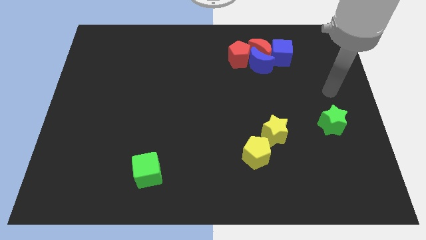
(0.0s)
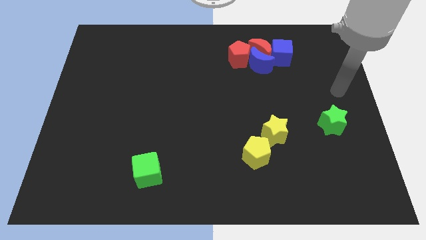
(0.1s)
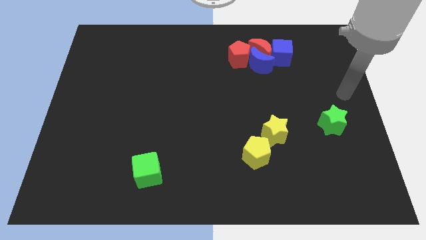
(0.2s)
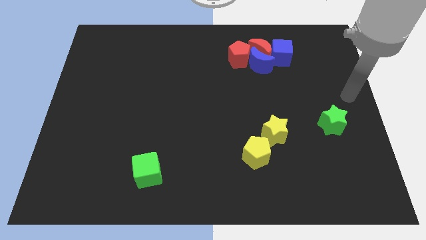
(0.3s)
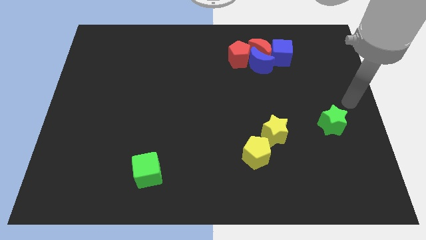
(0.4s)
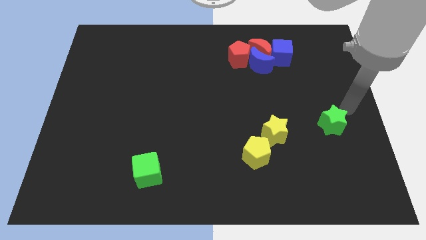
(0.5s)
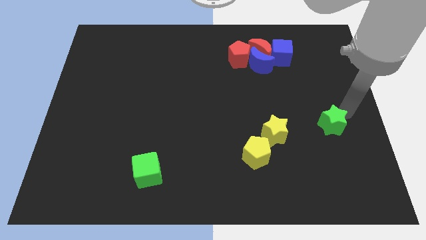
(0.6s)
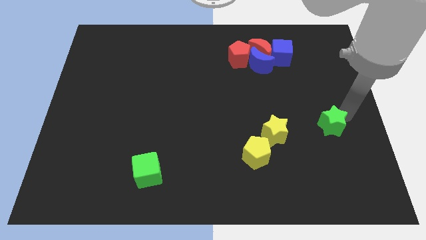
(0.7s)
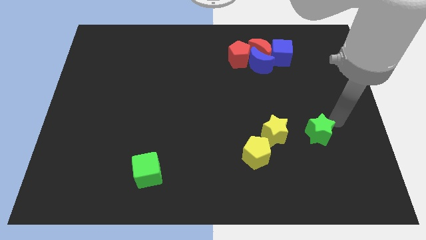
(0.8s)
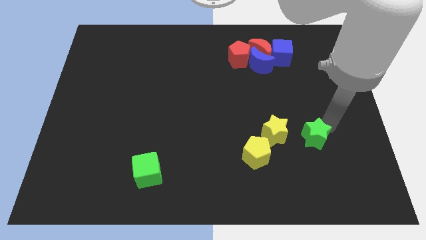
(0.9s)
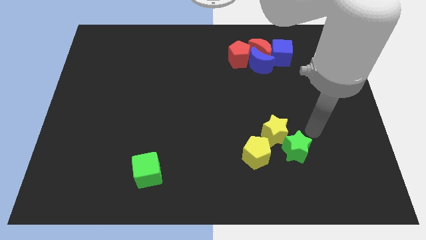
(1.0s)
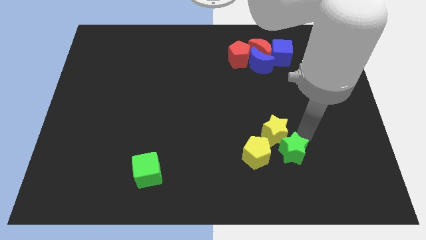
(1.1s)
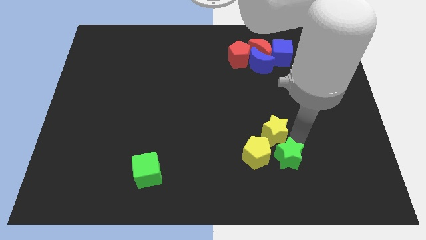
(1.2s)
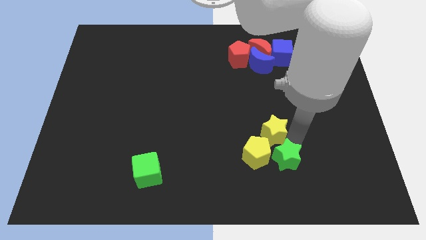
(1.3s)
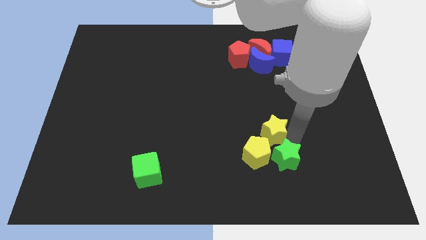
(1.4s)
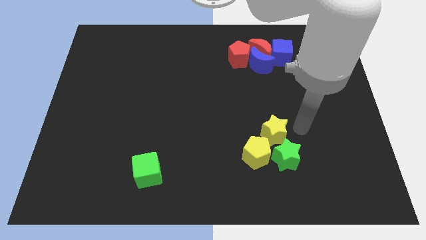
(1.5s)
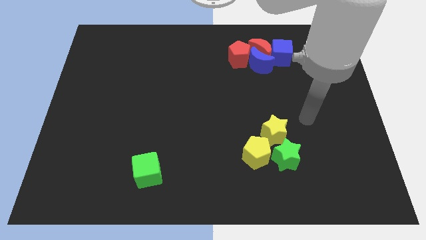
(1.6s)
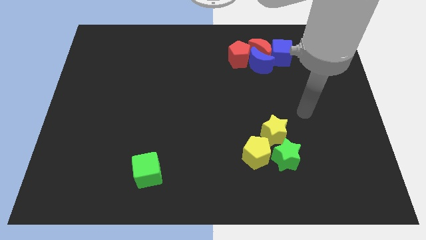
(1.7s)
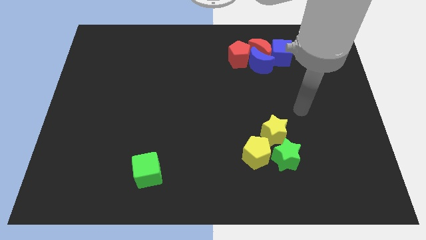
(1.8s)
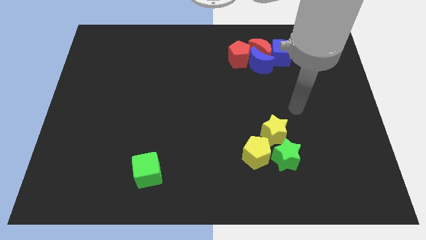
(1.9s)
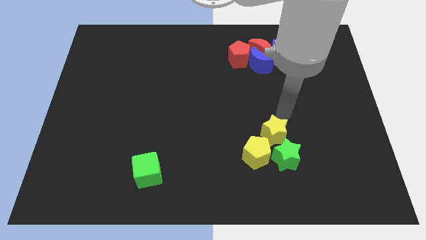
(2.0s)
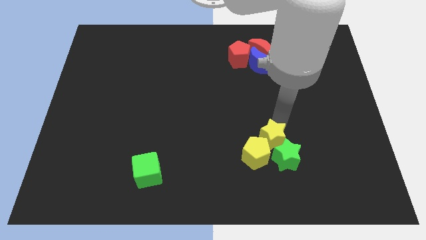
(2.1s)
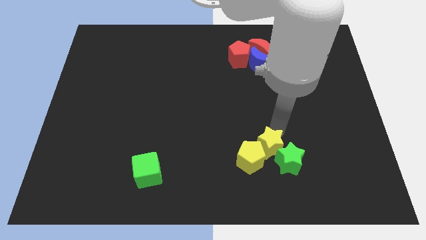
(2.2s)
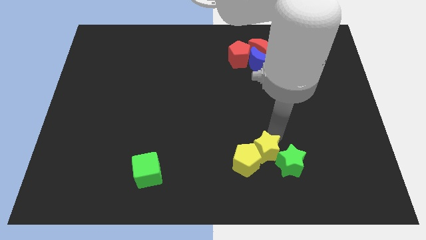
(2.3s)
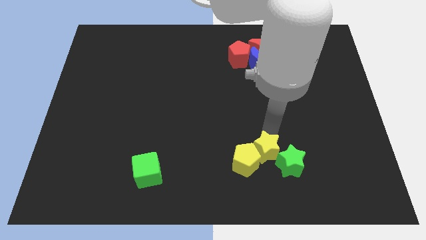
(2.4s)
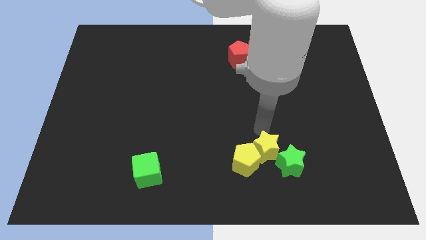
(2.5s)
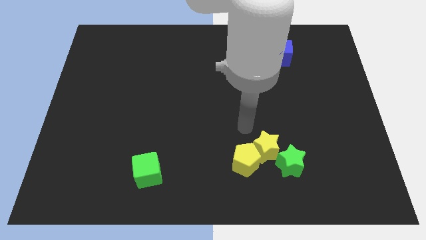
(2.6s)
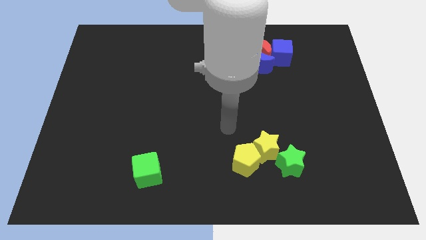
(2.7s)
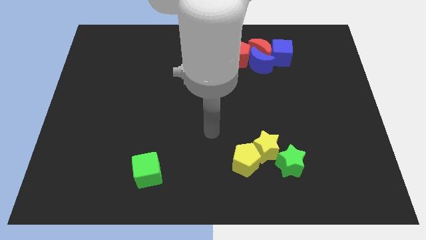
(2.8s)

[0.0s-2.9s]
push the green star to the bottom right of the yellow star

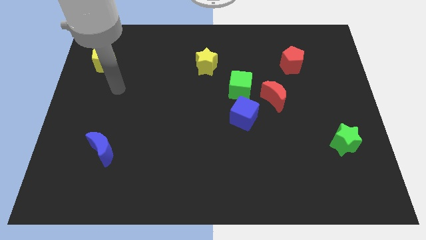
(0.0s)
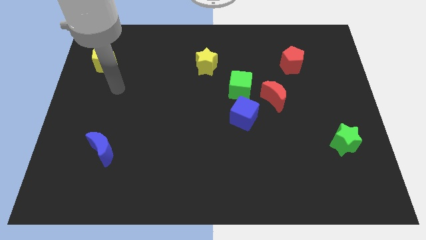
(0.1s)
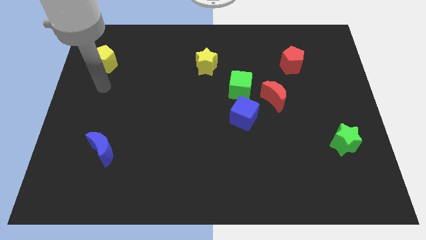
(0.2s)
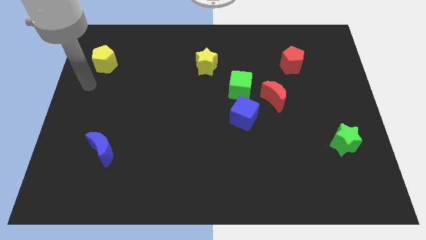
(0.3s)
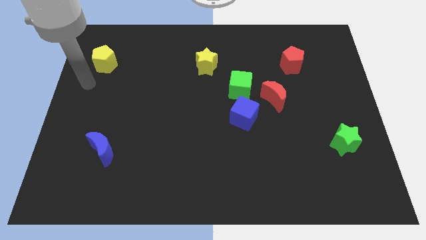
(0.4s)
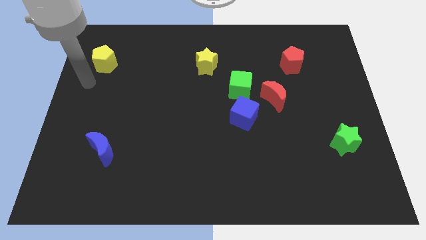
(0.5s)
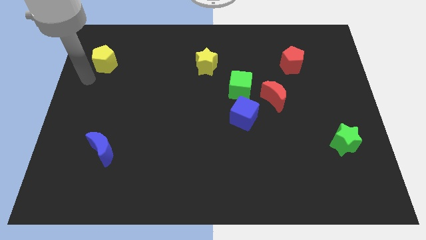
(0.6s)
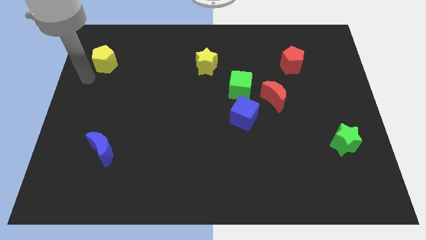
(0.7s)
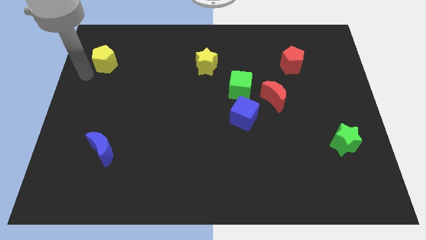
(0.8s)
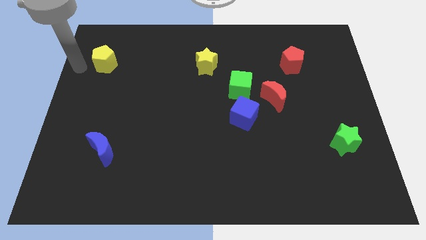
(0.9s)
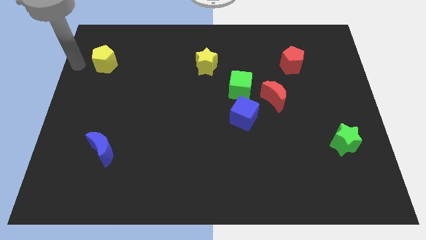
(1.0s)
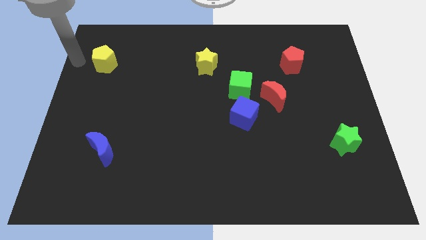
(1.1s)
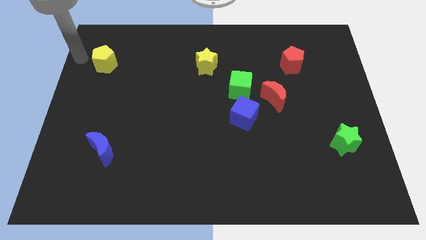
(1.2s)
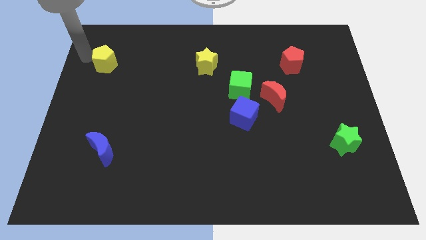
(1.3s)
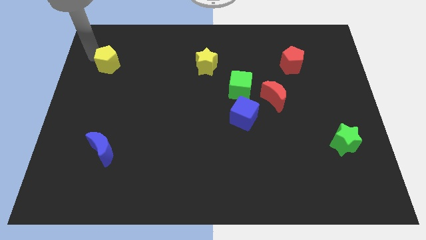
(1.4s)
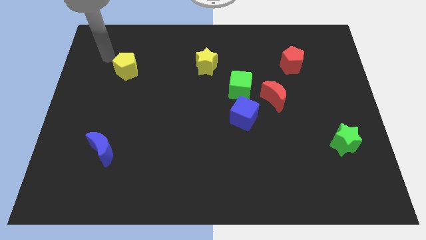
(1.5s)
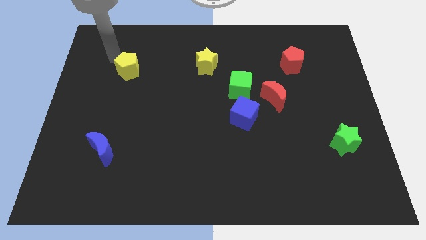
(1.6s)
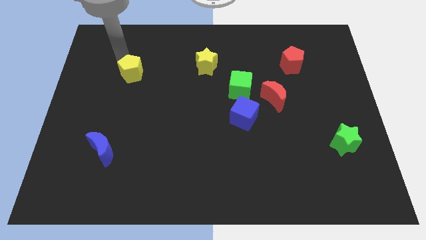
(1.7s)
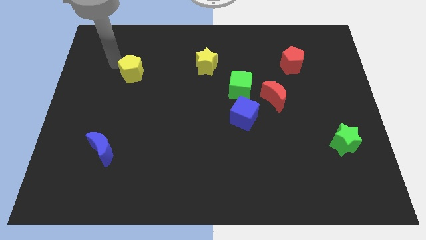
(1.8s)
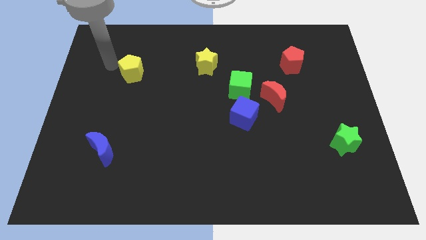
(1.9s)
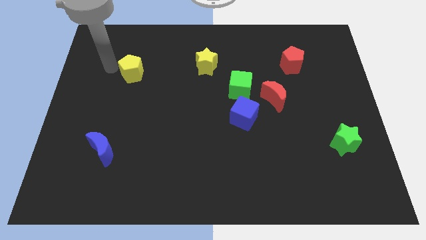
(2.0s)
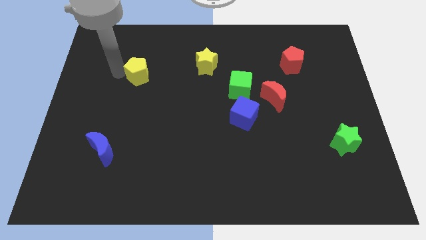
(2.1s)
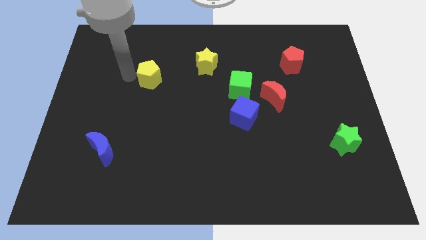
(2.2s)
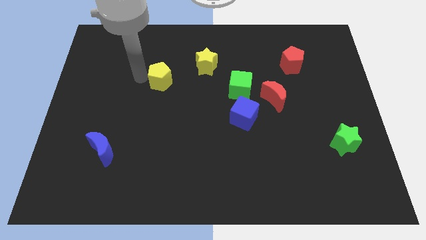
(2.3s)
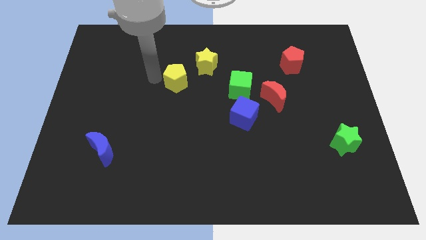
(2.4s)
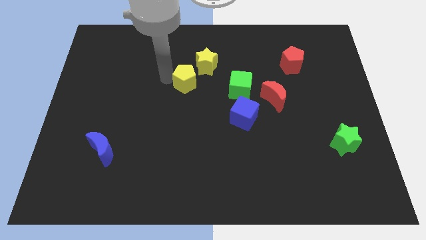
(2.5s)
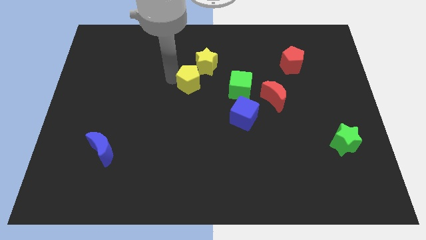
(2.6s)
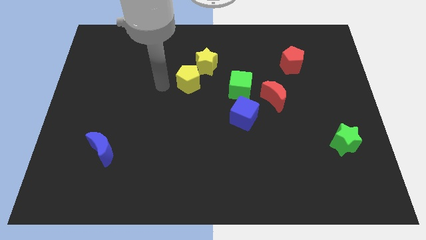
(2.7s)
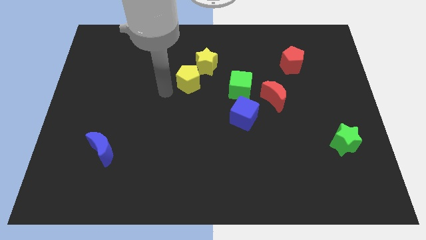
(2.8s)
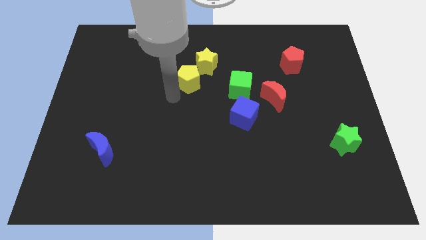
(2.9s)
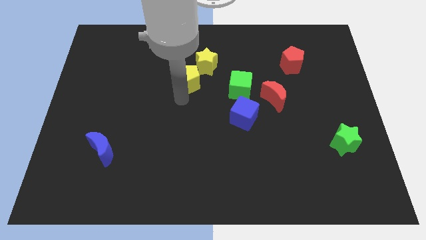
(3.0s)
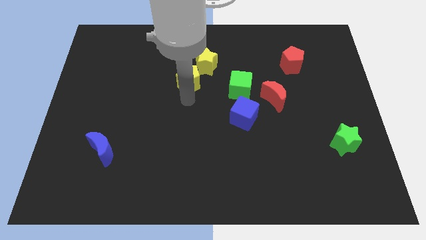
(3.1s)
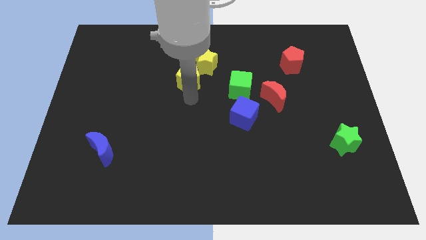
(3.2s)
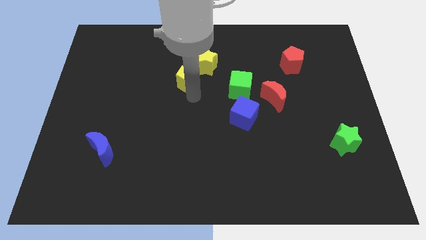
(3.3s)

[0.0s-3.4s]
move the yellow pentagon to the left bottom of the yellow star

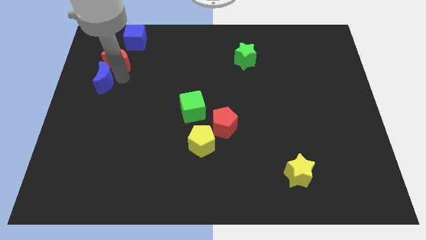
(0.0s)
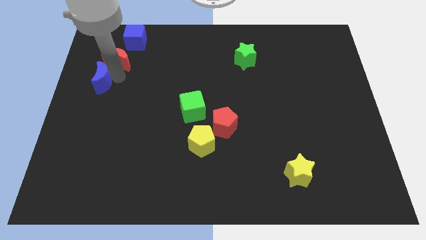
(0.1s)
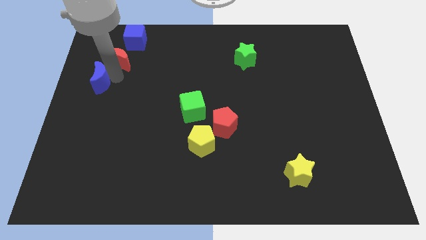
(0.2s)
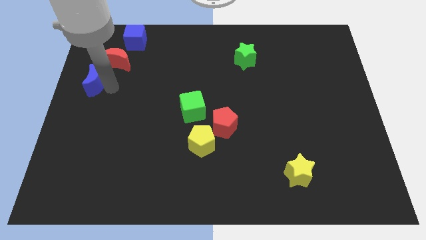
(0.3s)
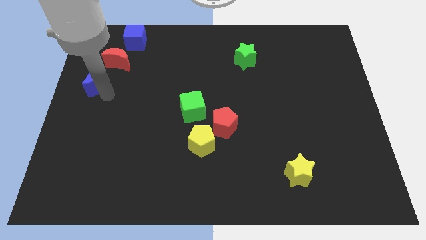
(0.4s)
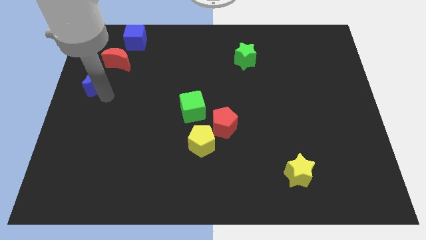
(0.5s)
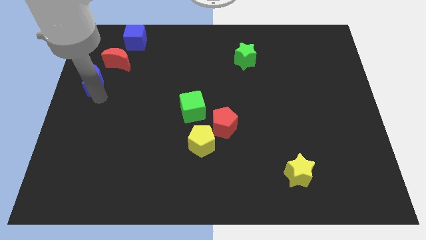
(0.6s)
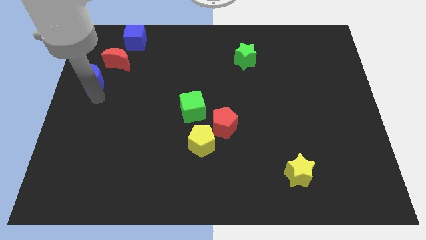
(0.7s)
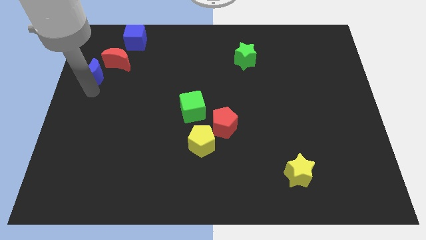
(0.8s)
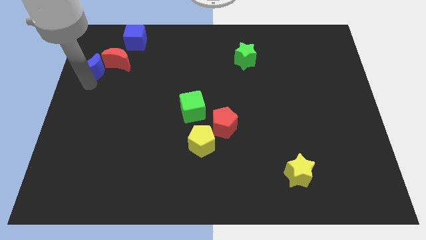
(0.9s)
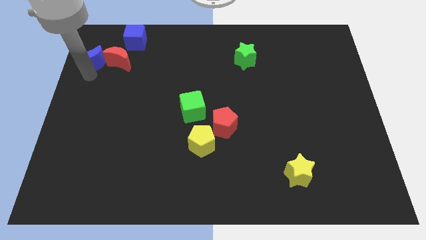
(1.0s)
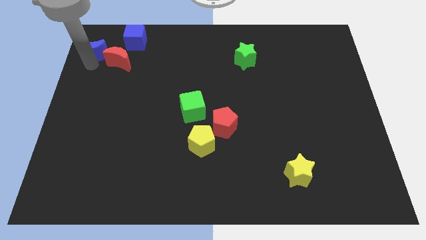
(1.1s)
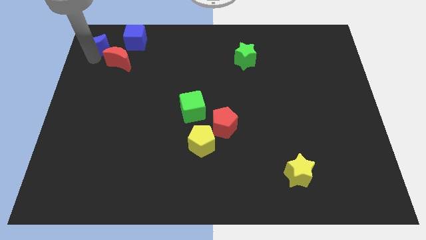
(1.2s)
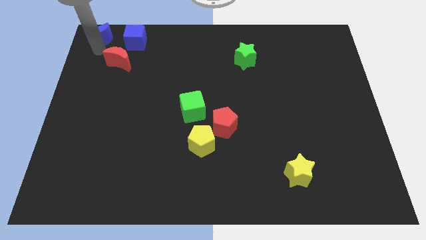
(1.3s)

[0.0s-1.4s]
place blue crescent beside blue cube

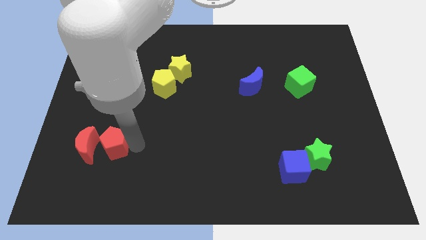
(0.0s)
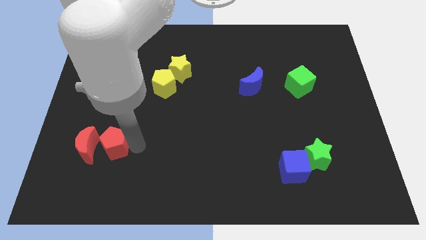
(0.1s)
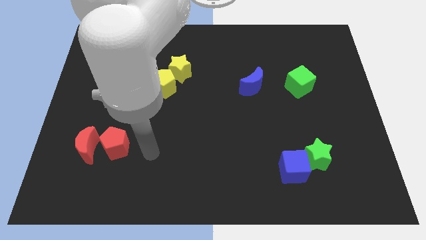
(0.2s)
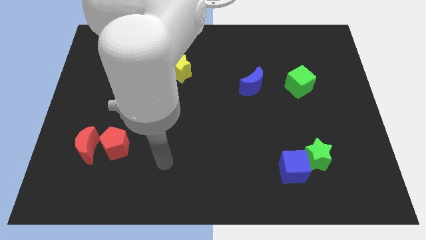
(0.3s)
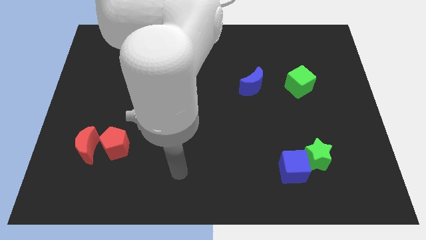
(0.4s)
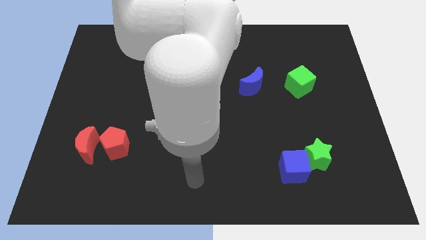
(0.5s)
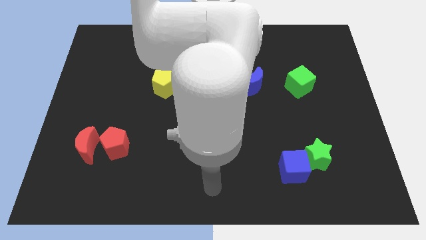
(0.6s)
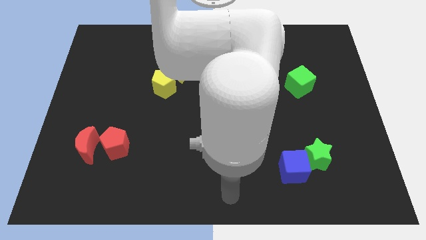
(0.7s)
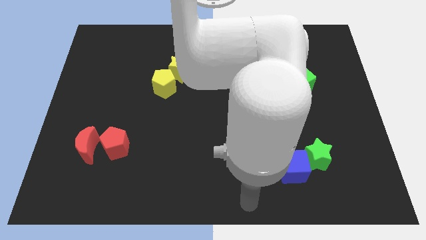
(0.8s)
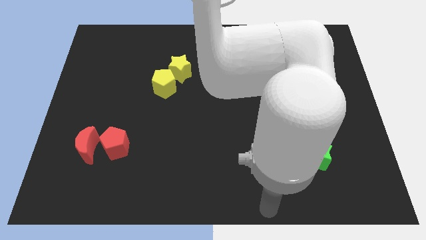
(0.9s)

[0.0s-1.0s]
place your arm to the bottom center of the board

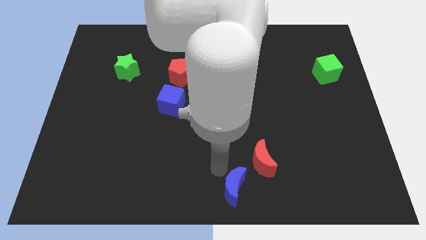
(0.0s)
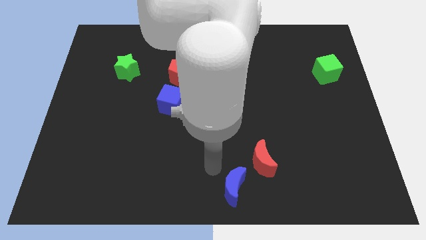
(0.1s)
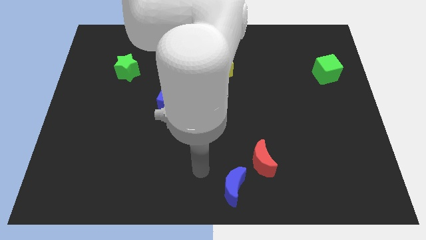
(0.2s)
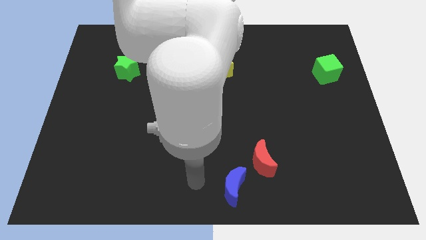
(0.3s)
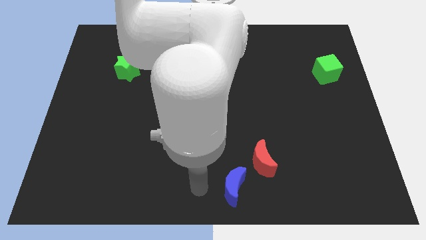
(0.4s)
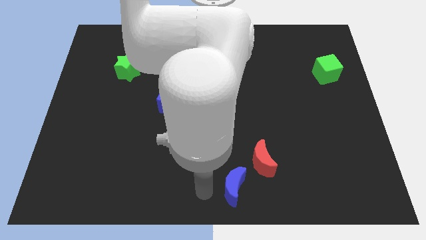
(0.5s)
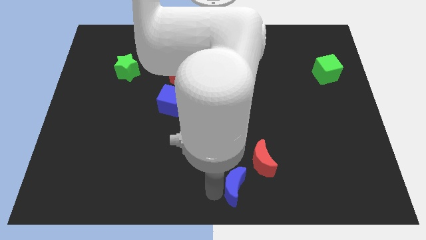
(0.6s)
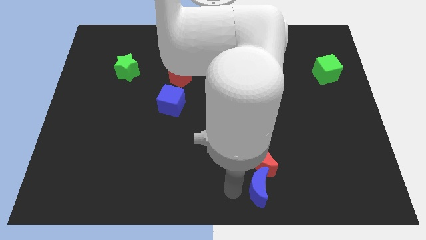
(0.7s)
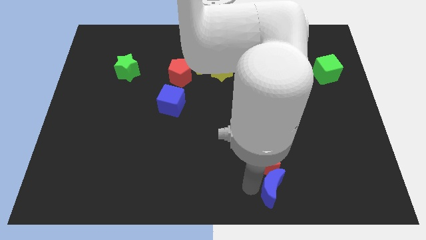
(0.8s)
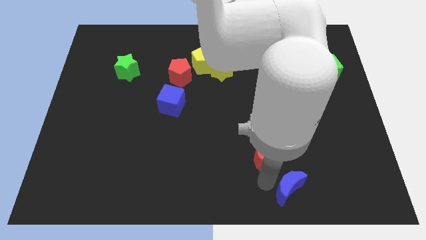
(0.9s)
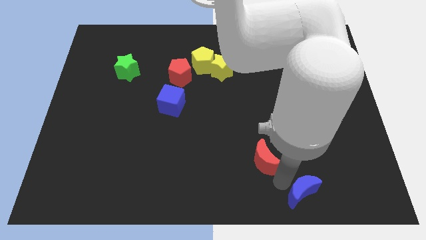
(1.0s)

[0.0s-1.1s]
push the blue moon towards the right
